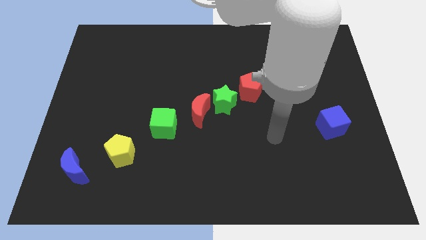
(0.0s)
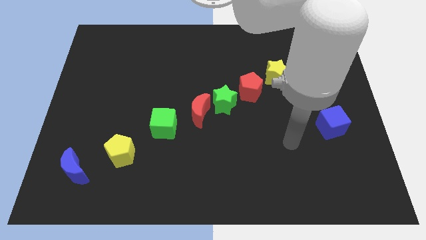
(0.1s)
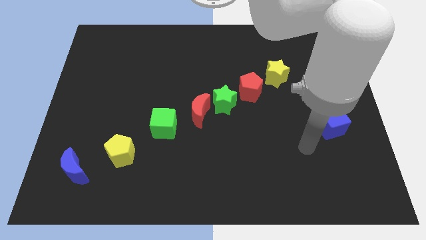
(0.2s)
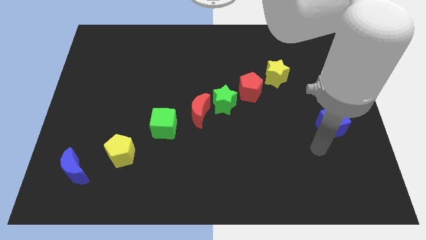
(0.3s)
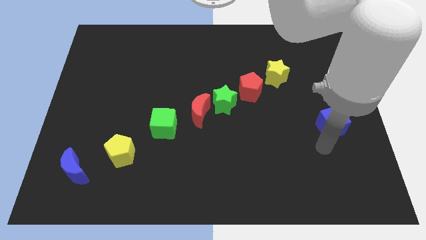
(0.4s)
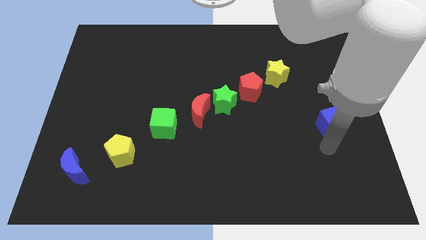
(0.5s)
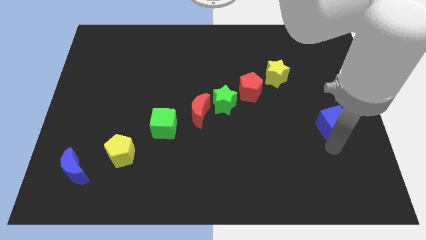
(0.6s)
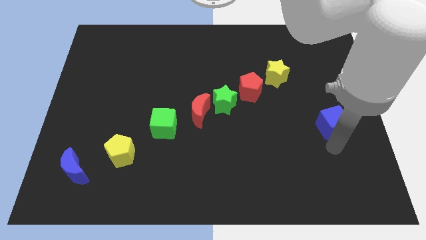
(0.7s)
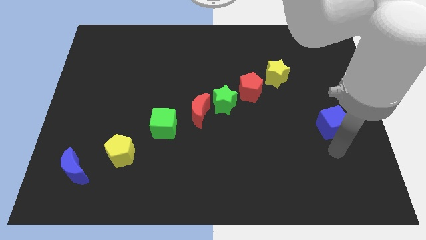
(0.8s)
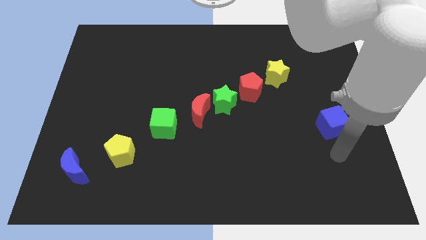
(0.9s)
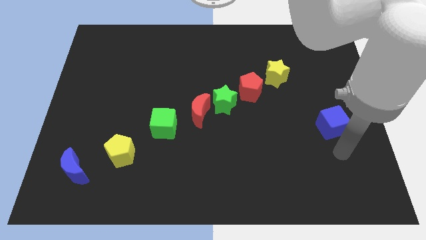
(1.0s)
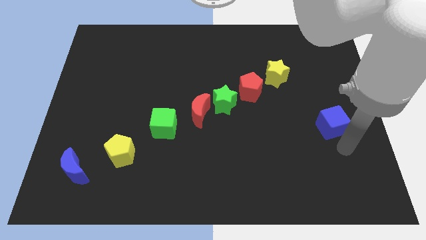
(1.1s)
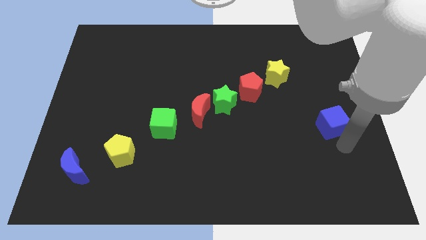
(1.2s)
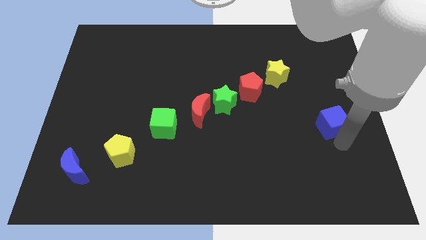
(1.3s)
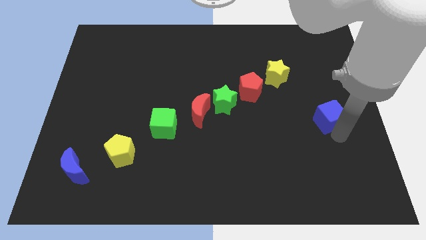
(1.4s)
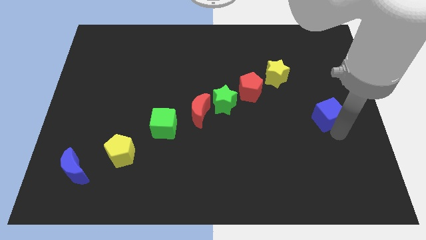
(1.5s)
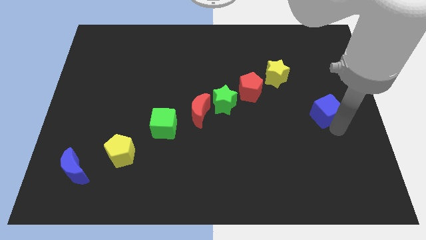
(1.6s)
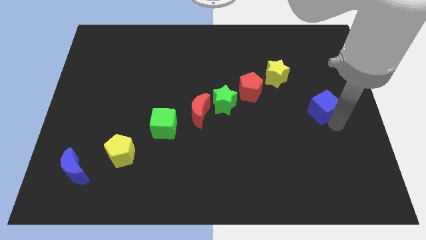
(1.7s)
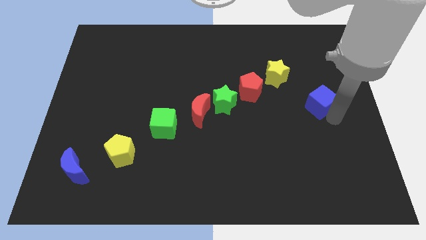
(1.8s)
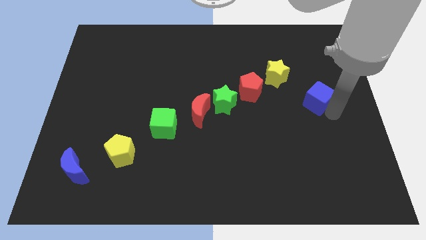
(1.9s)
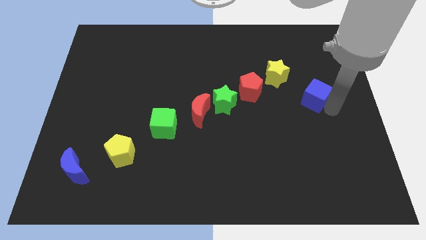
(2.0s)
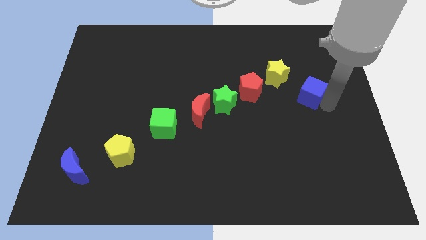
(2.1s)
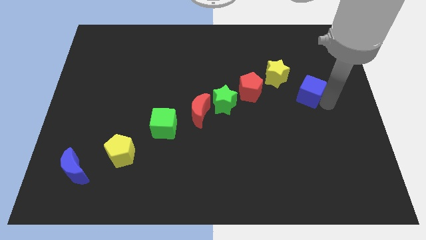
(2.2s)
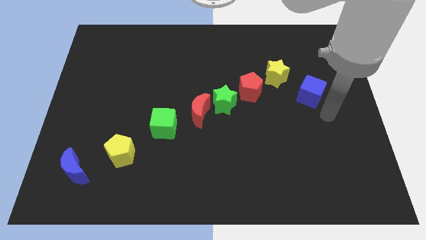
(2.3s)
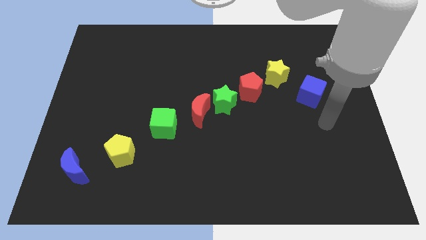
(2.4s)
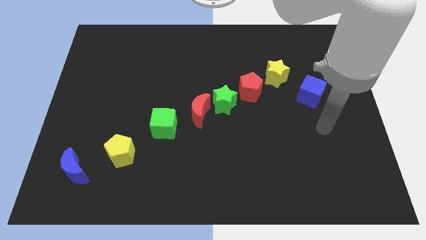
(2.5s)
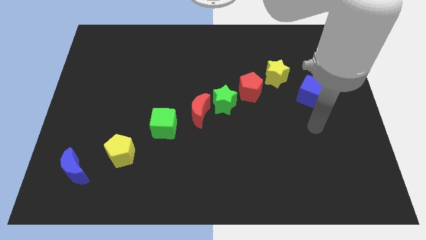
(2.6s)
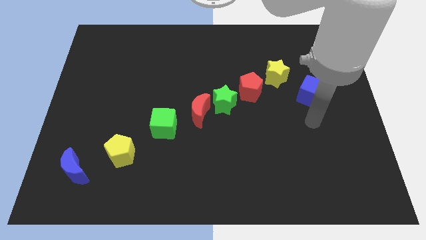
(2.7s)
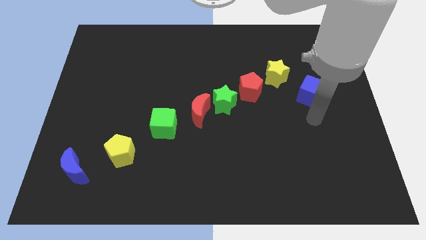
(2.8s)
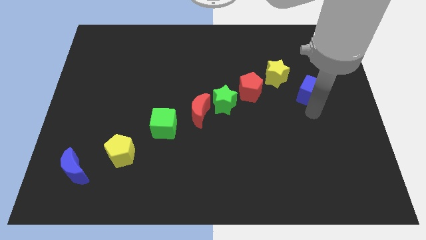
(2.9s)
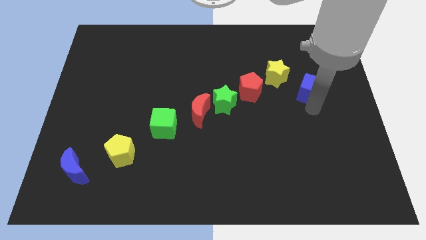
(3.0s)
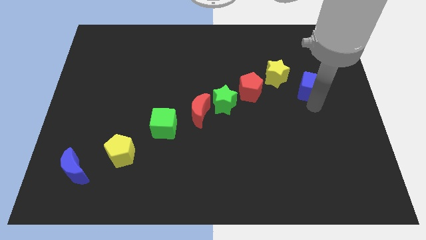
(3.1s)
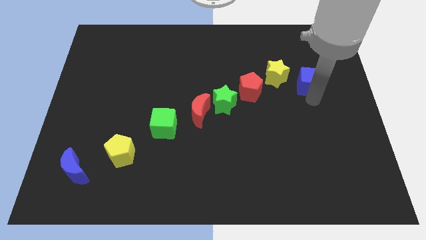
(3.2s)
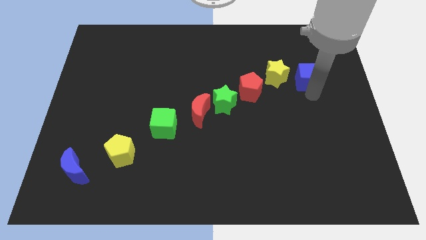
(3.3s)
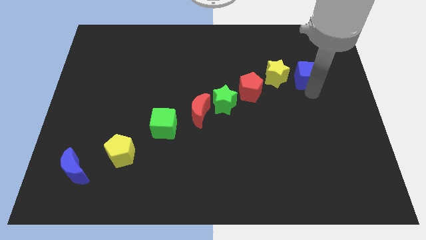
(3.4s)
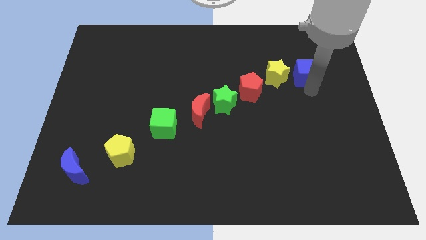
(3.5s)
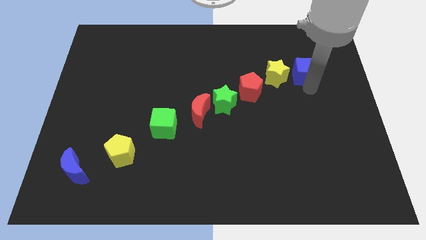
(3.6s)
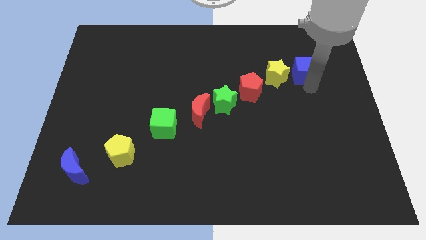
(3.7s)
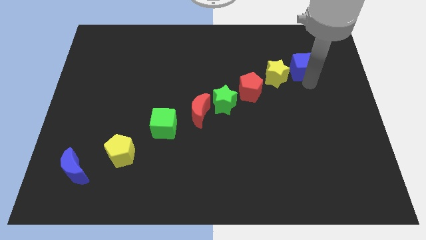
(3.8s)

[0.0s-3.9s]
move the blue cube close to the yellow star

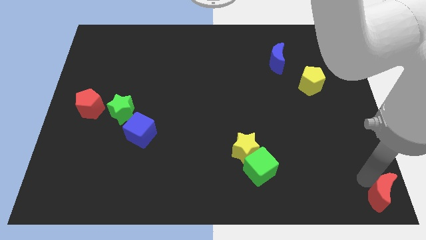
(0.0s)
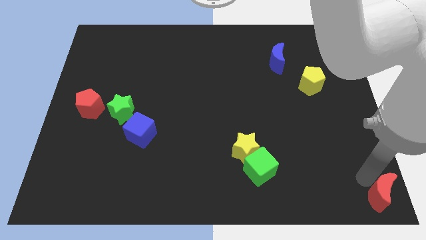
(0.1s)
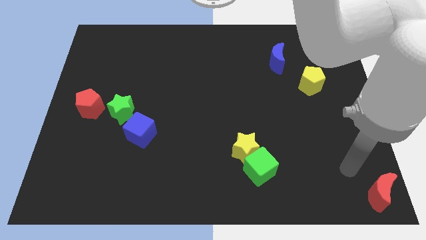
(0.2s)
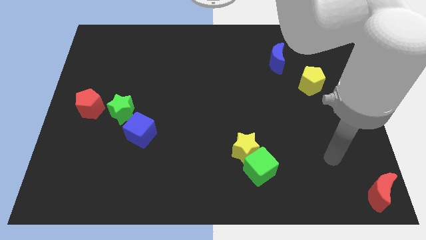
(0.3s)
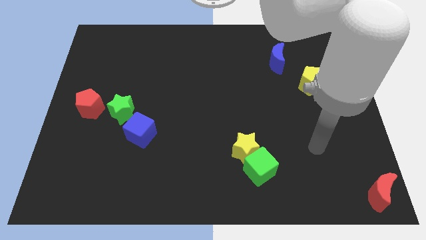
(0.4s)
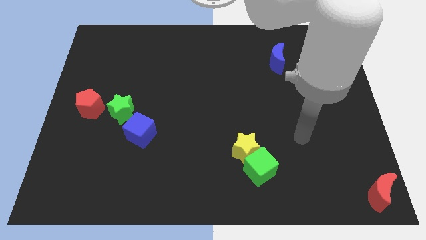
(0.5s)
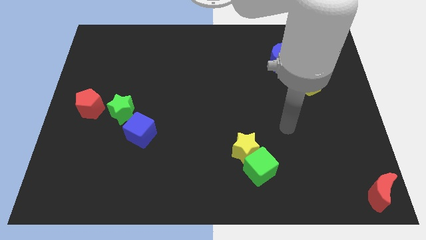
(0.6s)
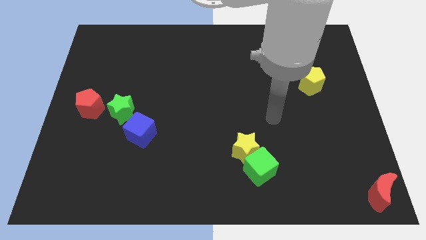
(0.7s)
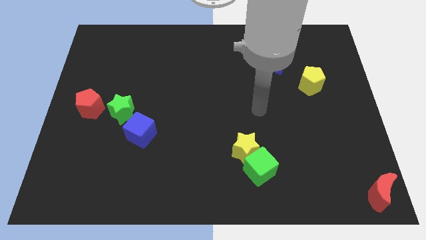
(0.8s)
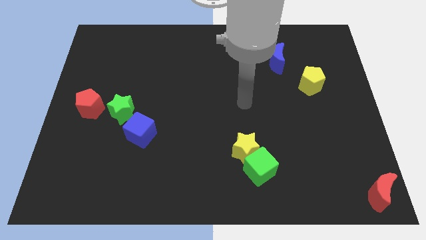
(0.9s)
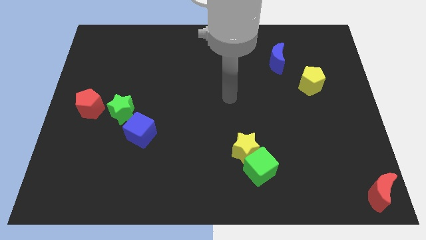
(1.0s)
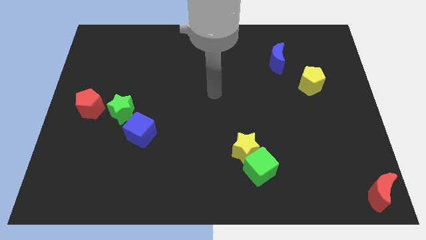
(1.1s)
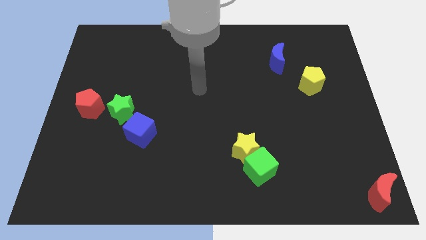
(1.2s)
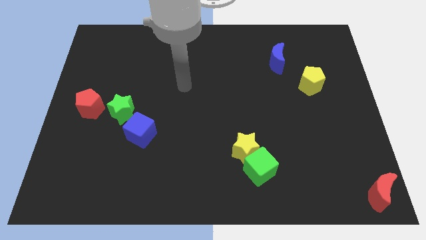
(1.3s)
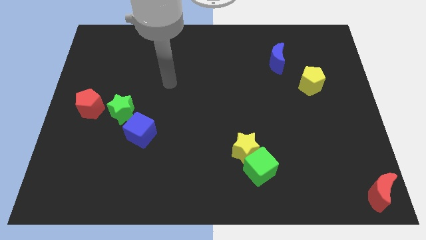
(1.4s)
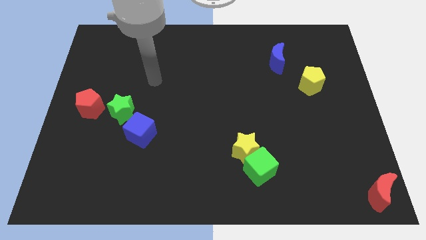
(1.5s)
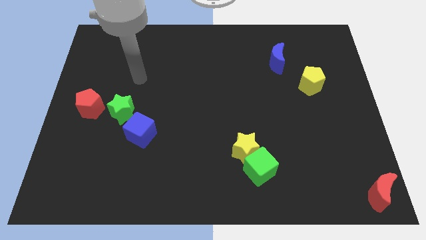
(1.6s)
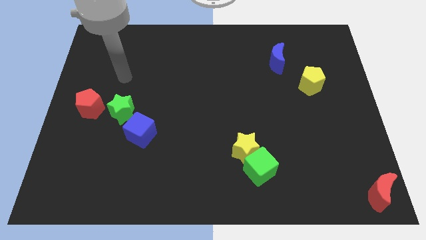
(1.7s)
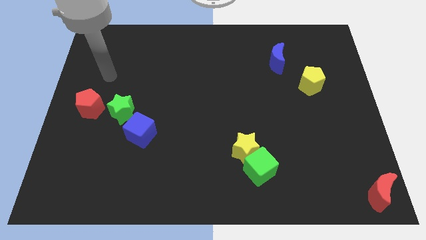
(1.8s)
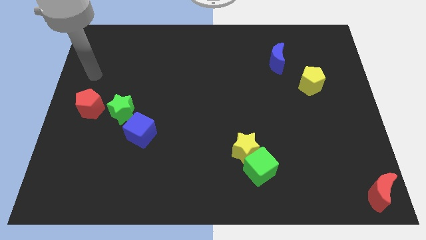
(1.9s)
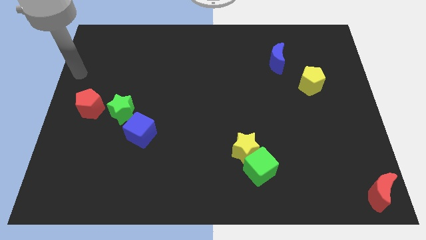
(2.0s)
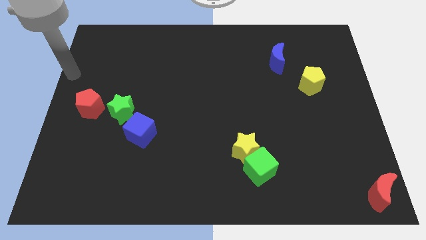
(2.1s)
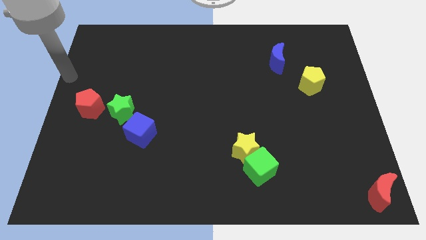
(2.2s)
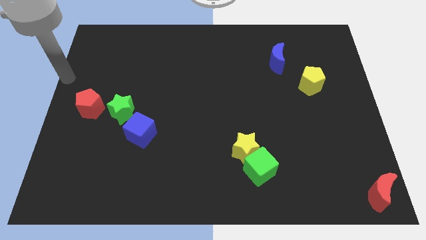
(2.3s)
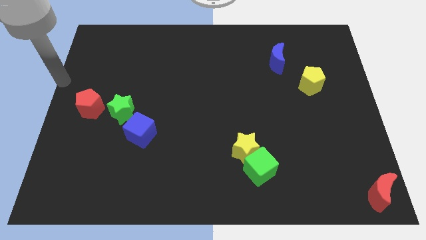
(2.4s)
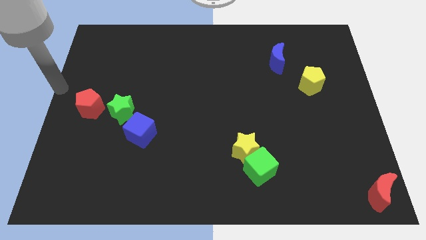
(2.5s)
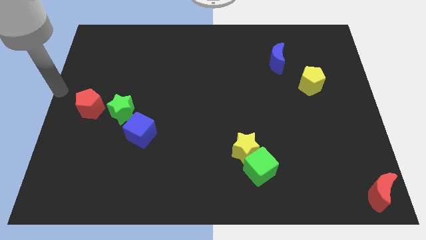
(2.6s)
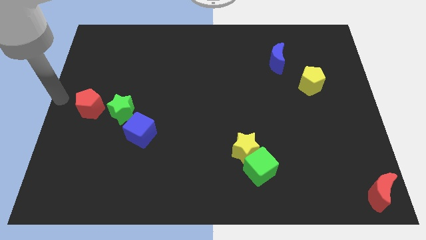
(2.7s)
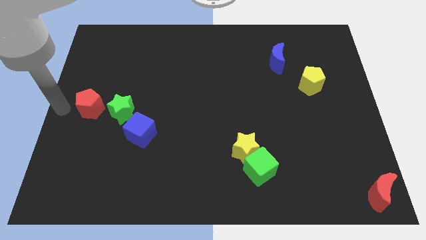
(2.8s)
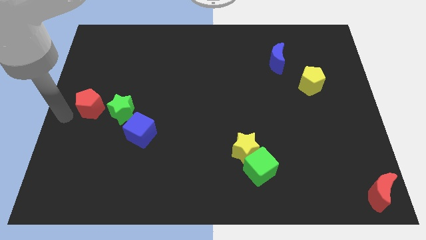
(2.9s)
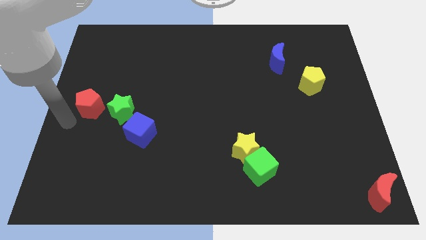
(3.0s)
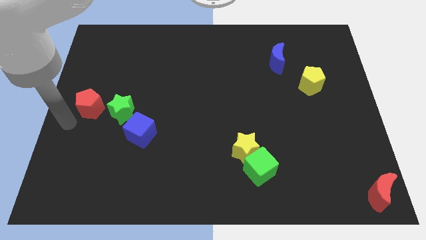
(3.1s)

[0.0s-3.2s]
move your arm towards red pentagon

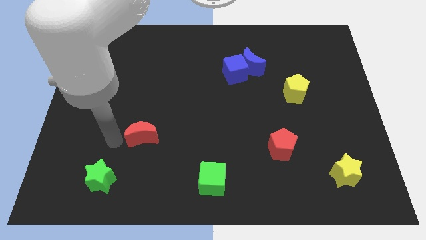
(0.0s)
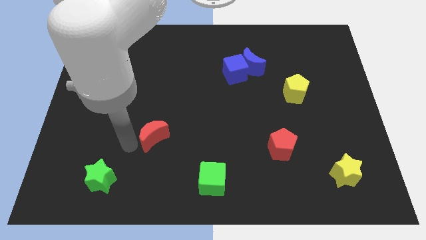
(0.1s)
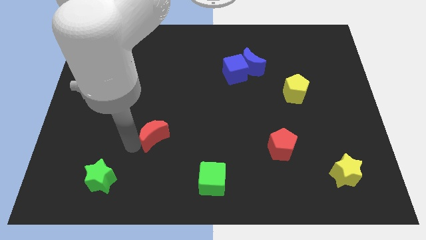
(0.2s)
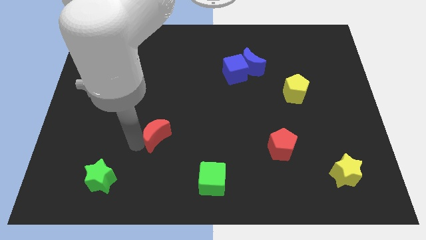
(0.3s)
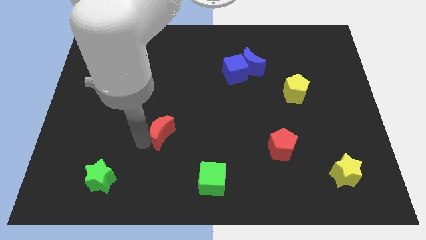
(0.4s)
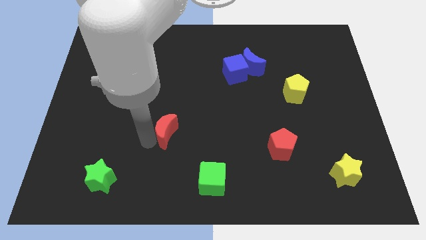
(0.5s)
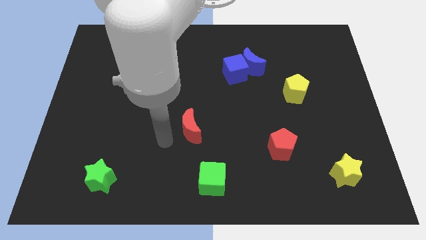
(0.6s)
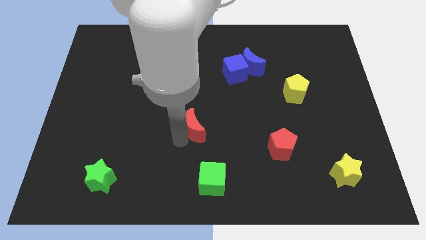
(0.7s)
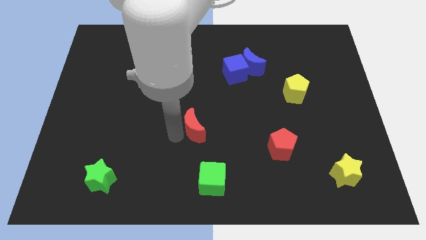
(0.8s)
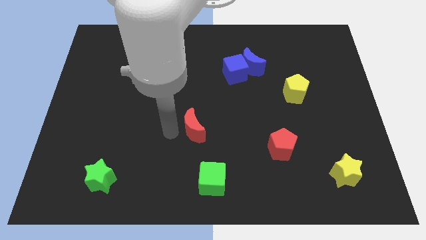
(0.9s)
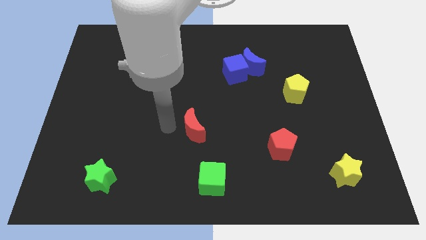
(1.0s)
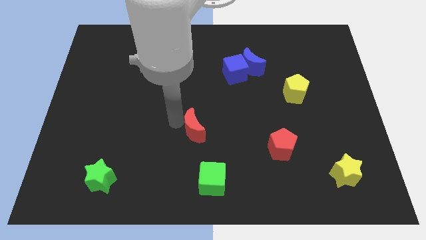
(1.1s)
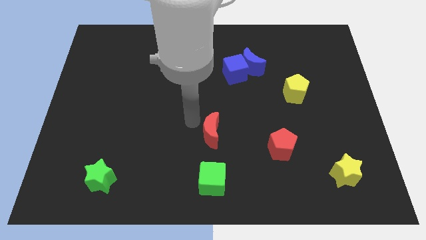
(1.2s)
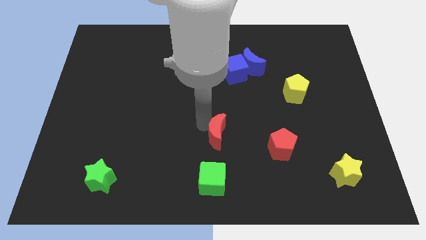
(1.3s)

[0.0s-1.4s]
put the red crescent above the green cube

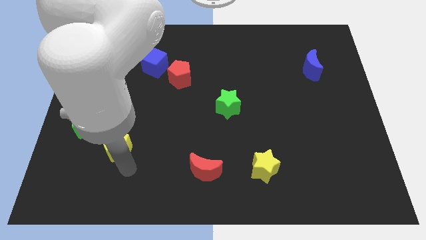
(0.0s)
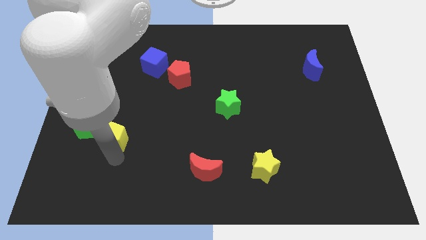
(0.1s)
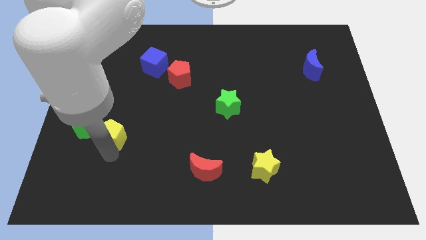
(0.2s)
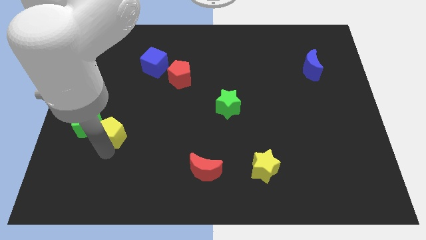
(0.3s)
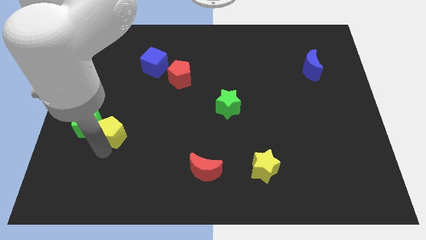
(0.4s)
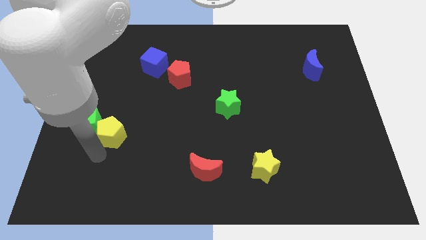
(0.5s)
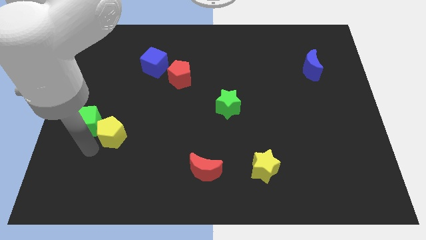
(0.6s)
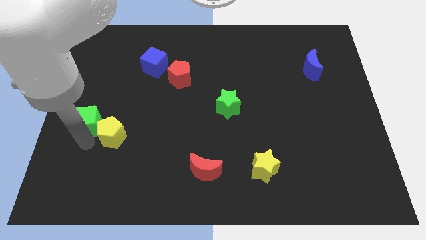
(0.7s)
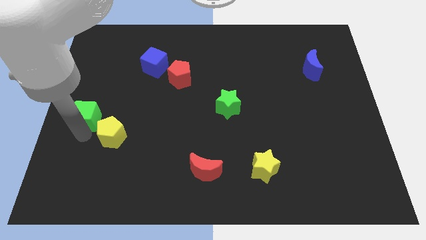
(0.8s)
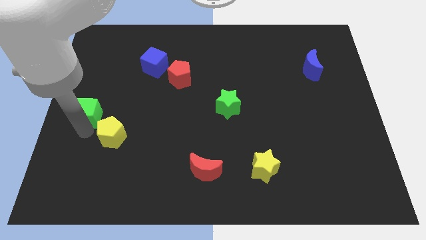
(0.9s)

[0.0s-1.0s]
push yellow pentagon slightly towards left upwards
